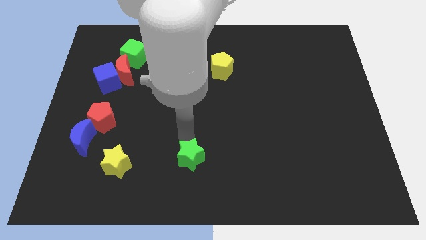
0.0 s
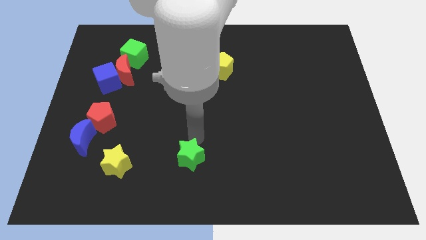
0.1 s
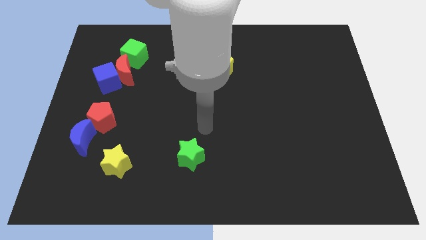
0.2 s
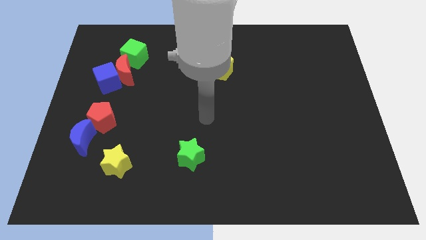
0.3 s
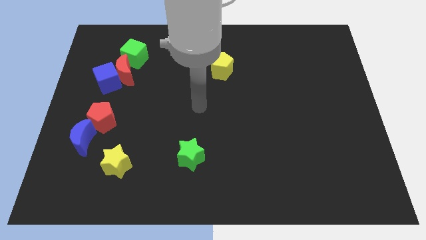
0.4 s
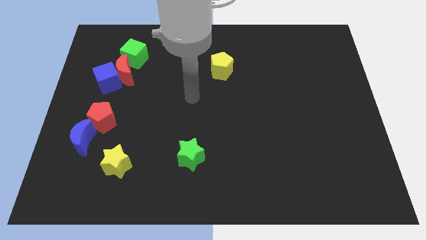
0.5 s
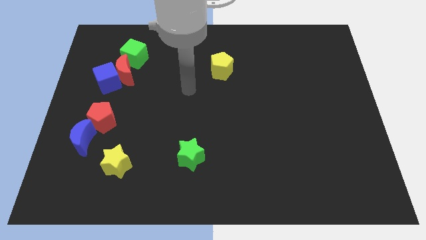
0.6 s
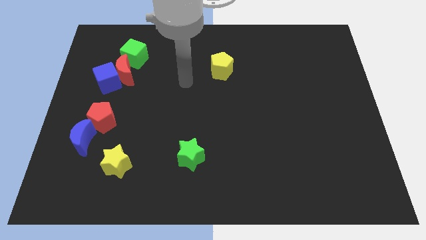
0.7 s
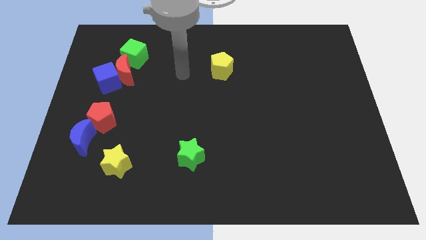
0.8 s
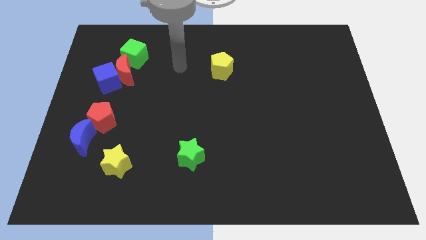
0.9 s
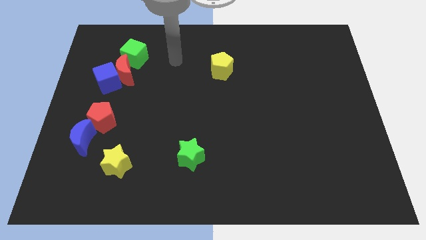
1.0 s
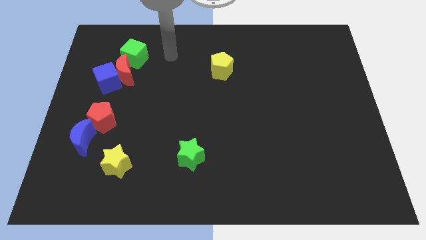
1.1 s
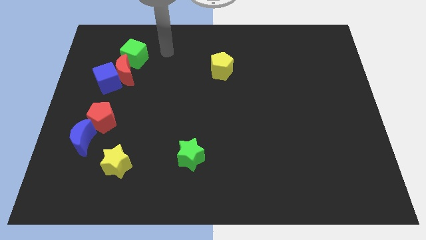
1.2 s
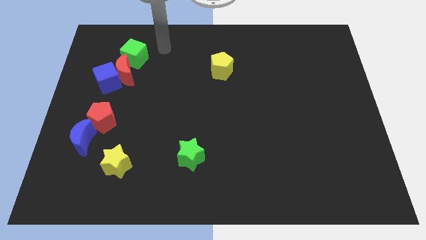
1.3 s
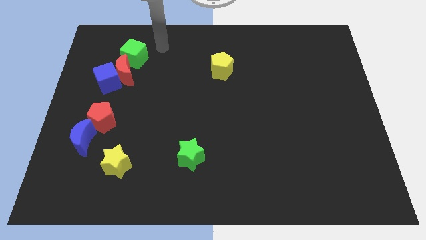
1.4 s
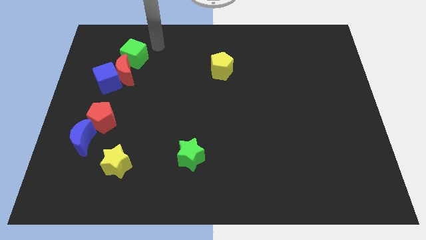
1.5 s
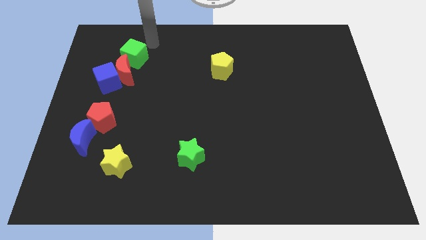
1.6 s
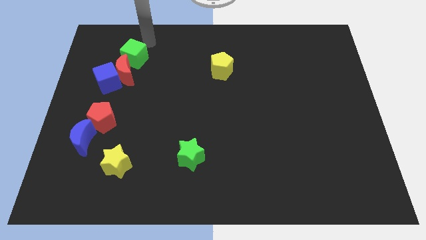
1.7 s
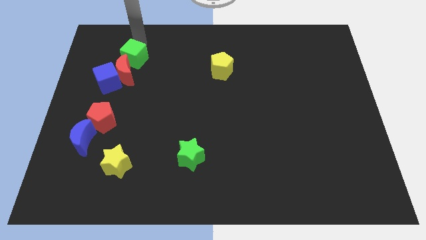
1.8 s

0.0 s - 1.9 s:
point your arm on top of green cube

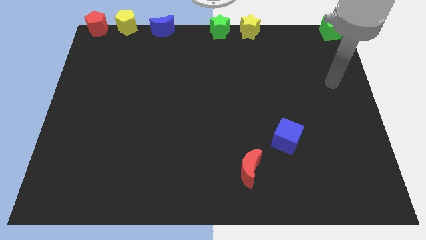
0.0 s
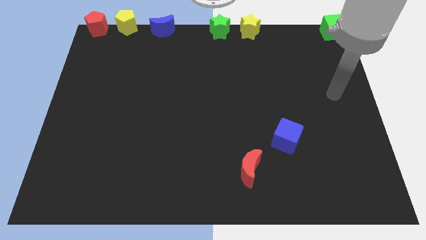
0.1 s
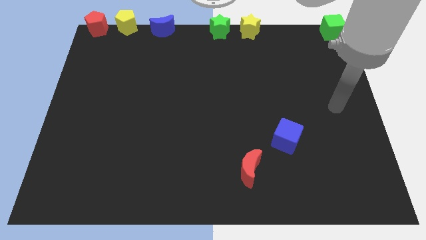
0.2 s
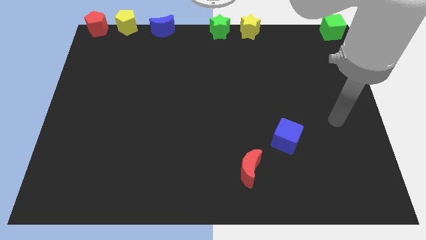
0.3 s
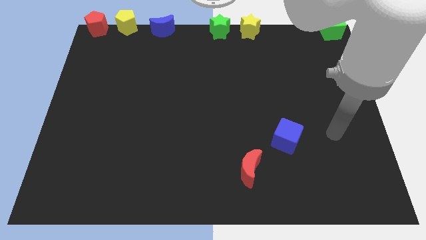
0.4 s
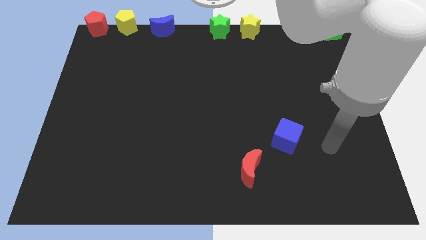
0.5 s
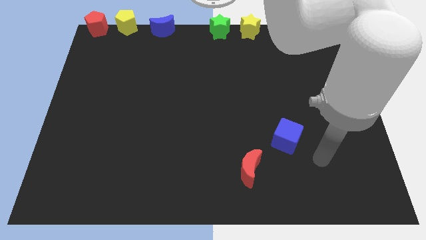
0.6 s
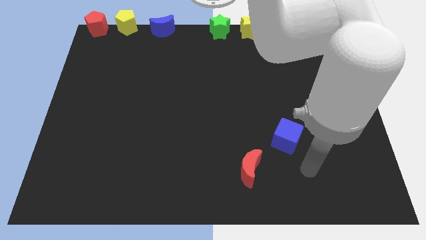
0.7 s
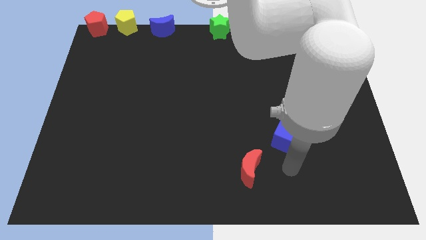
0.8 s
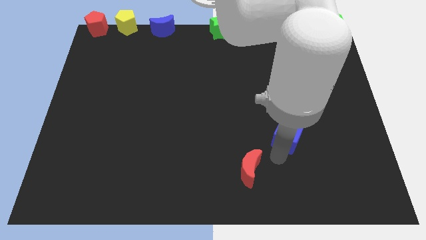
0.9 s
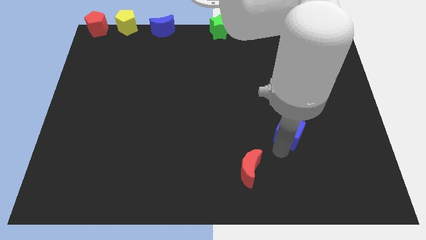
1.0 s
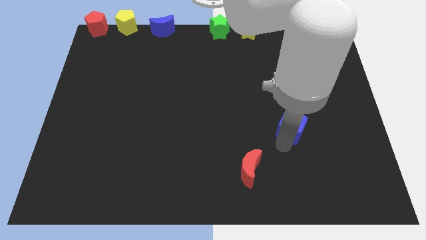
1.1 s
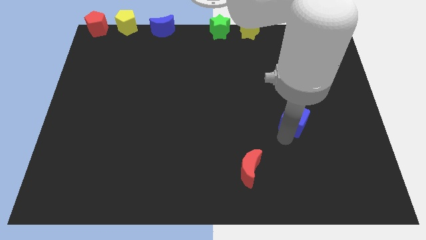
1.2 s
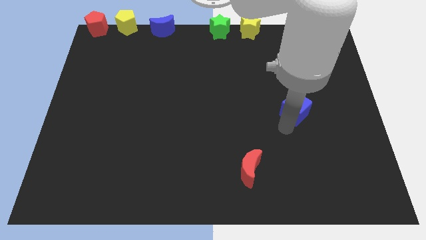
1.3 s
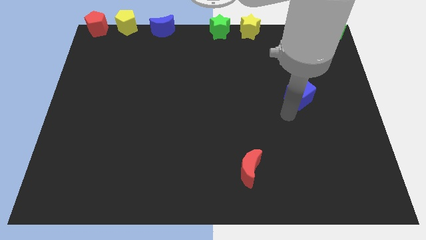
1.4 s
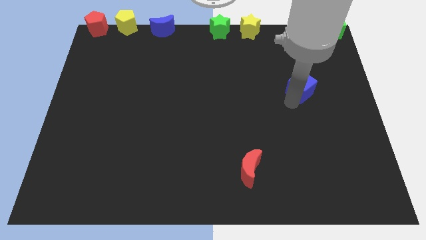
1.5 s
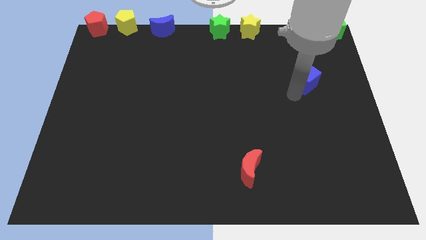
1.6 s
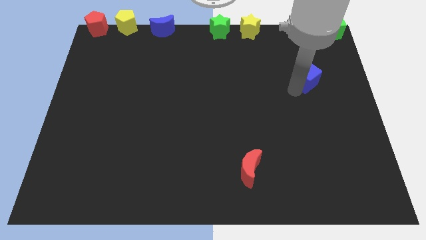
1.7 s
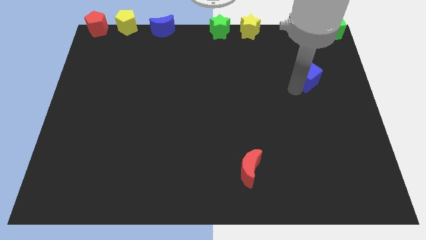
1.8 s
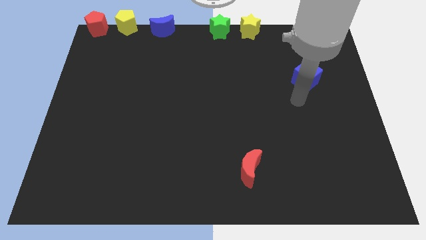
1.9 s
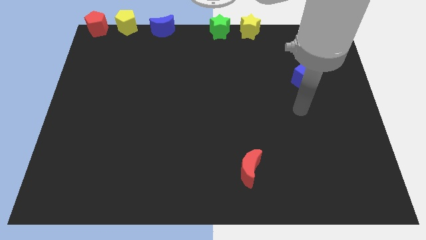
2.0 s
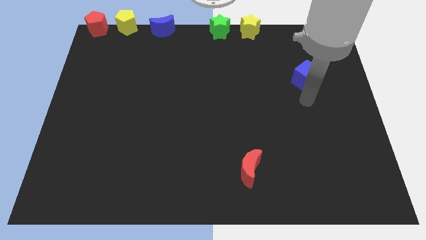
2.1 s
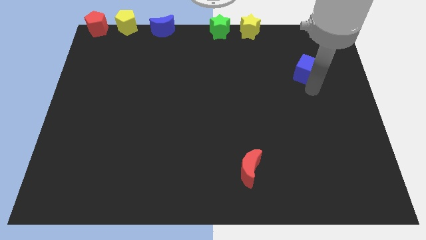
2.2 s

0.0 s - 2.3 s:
move the blue cube diagonal above red moon

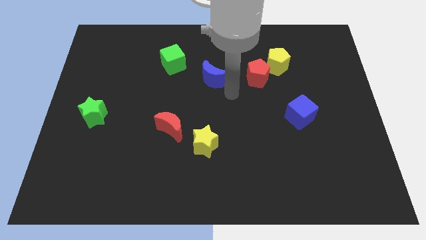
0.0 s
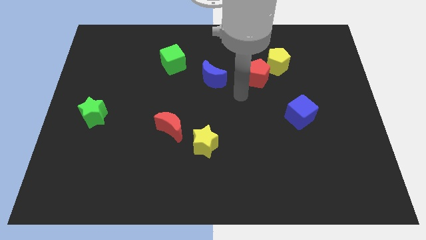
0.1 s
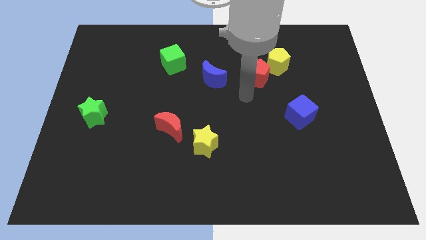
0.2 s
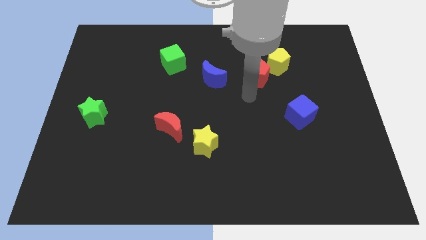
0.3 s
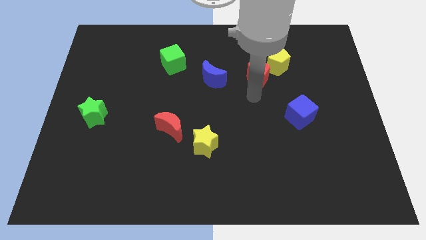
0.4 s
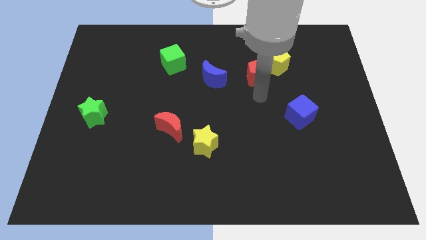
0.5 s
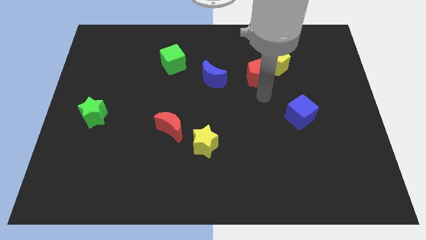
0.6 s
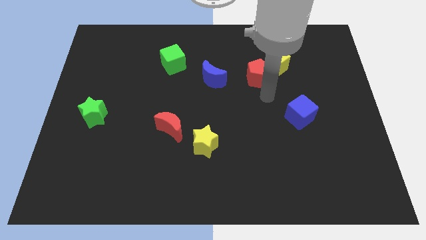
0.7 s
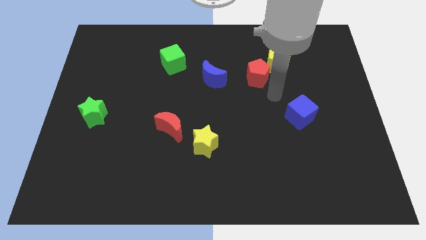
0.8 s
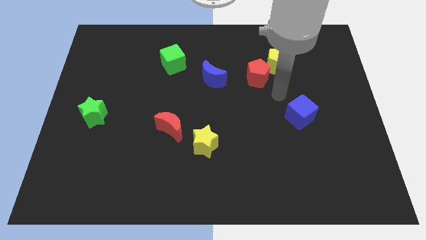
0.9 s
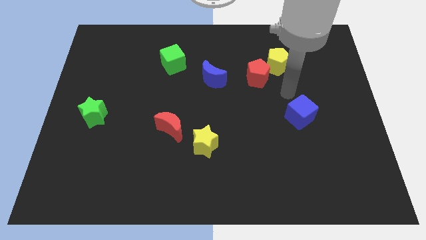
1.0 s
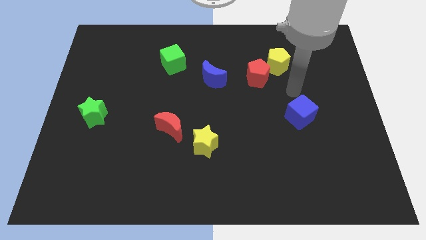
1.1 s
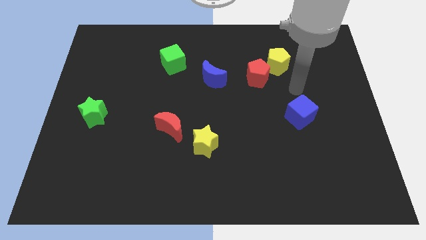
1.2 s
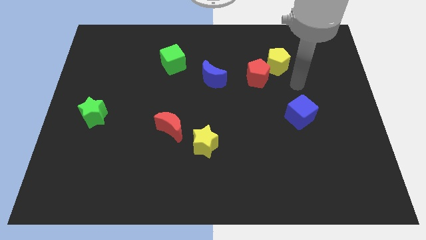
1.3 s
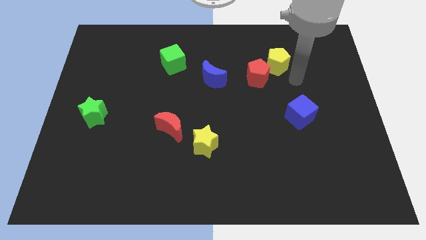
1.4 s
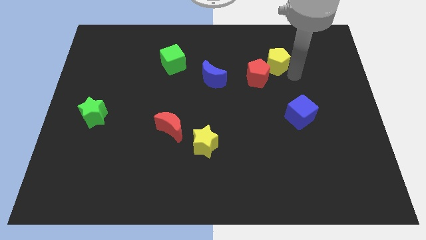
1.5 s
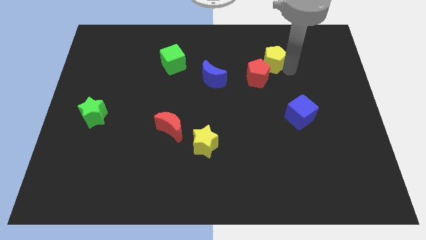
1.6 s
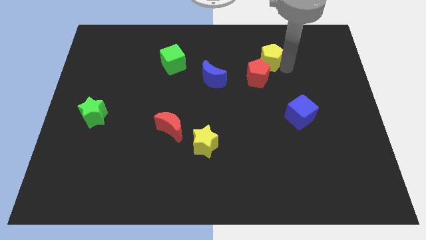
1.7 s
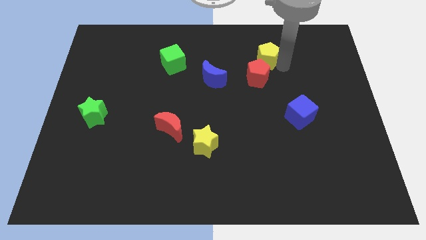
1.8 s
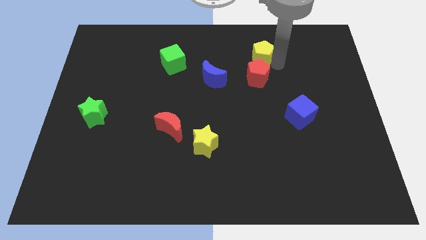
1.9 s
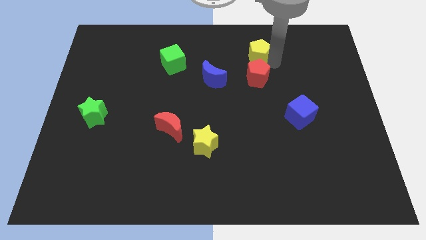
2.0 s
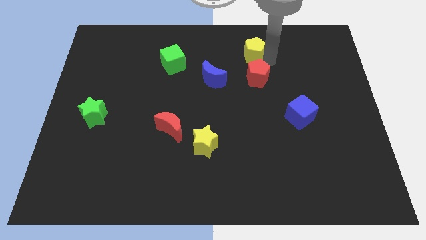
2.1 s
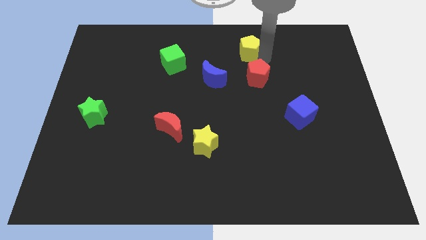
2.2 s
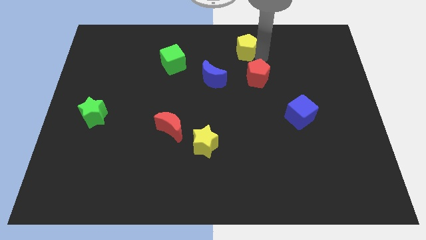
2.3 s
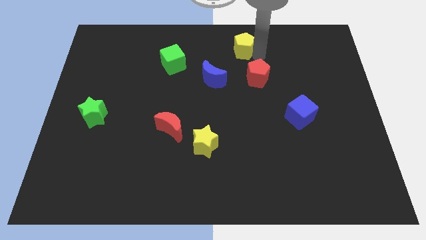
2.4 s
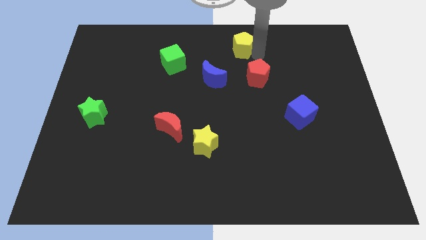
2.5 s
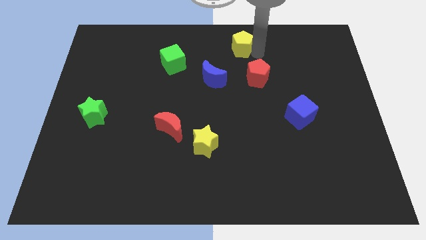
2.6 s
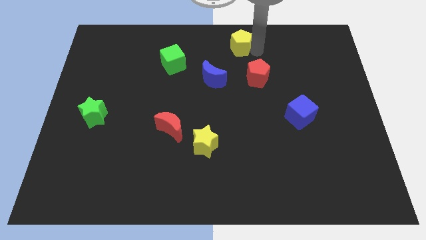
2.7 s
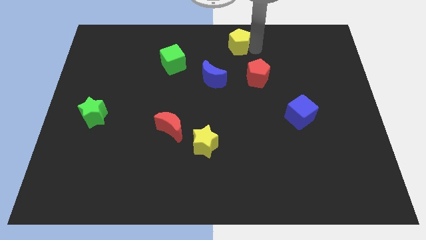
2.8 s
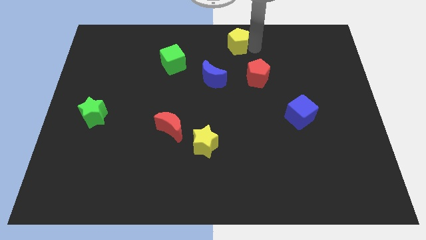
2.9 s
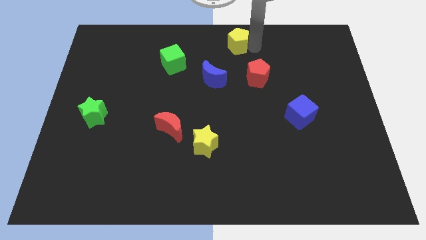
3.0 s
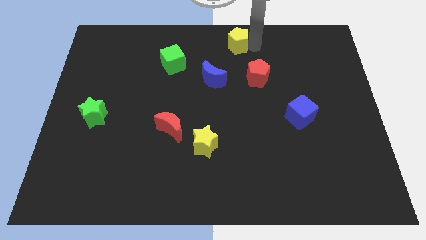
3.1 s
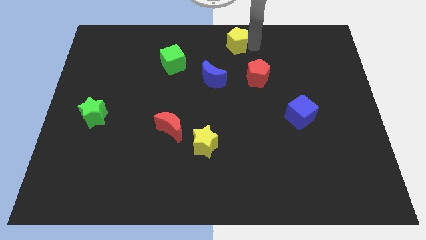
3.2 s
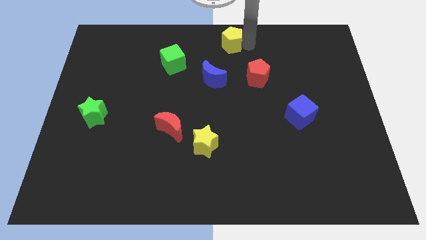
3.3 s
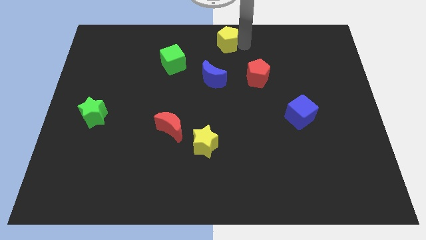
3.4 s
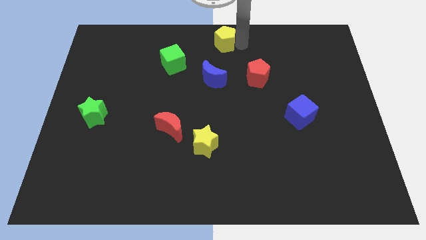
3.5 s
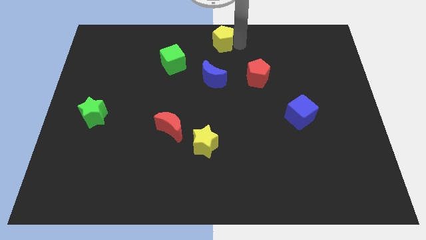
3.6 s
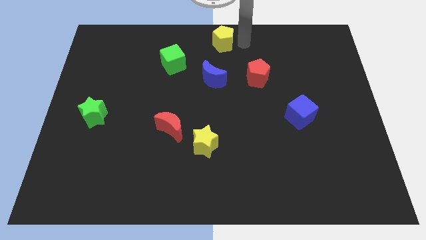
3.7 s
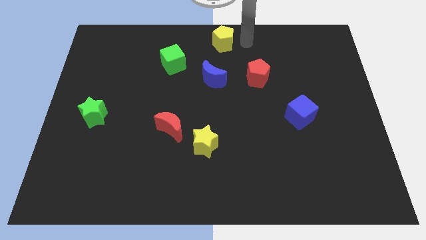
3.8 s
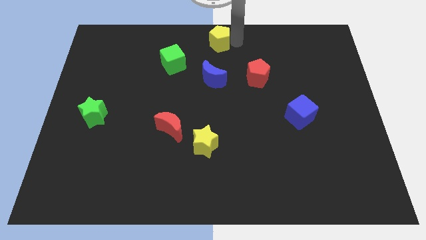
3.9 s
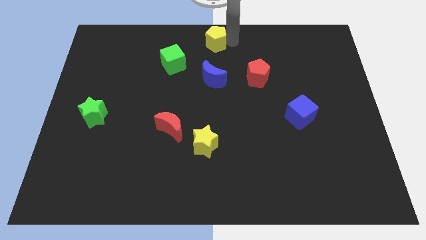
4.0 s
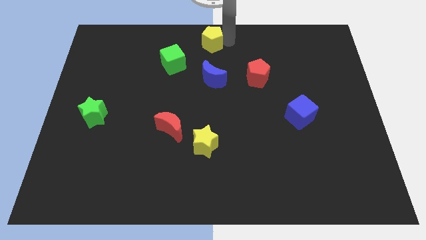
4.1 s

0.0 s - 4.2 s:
place the yellow pentagon at the top center of the board

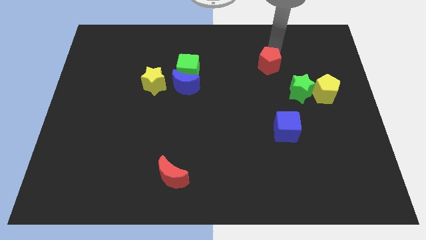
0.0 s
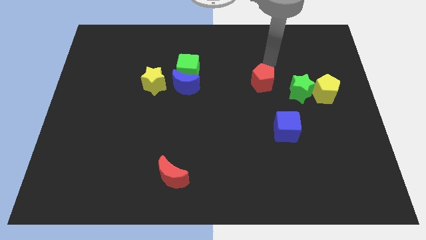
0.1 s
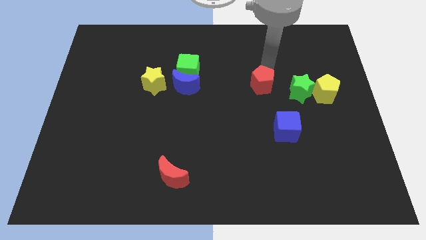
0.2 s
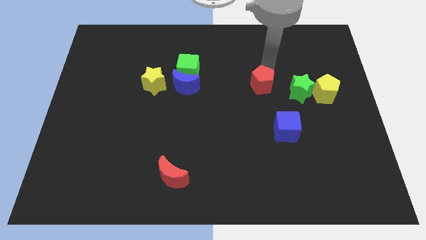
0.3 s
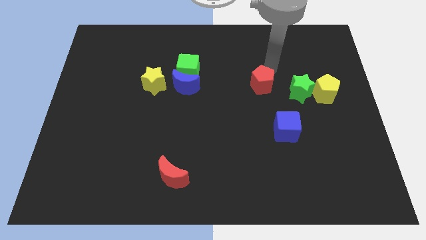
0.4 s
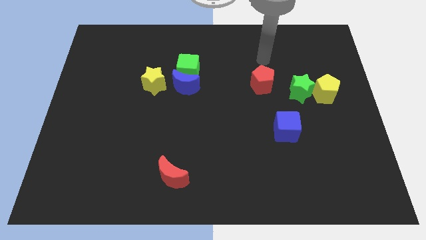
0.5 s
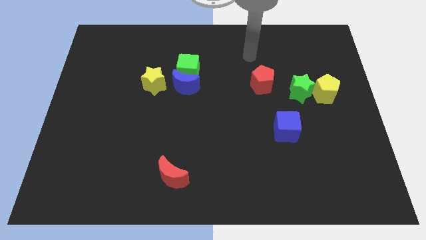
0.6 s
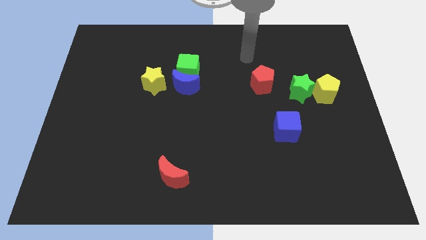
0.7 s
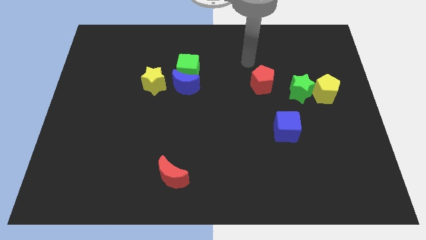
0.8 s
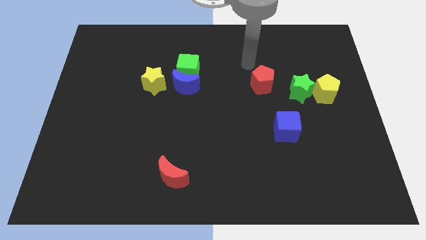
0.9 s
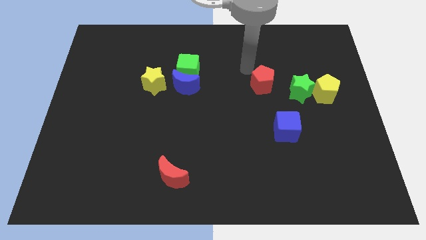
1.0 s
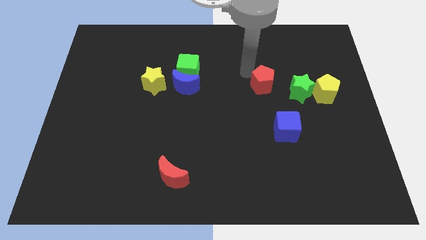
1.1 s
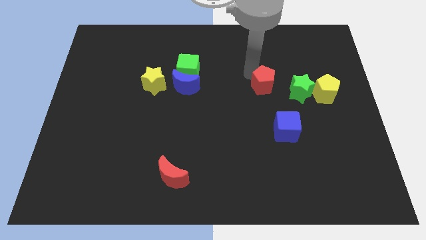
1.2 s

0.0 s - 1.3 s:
move red pentagon left to the green star
